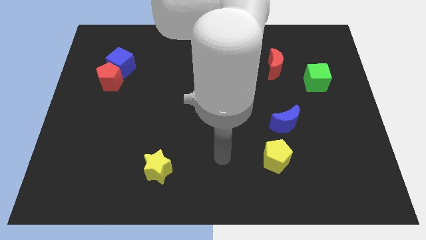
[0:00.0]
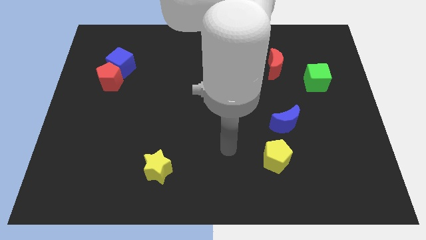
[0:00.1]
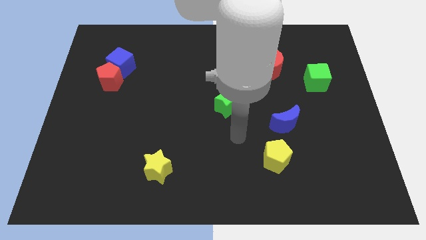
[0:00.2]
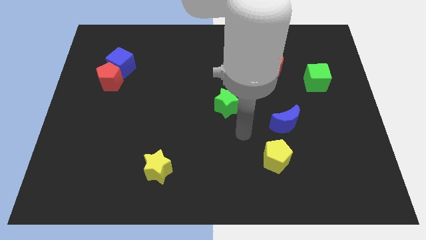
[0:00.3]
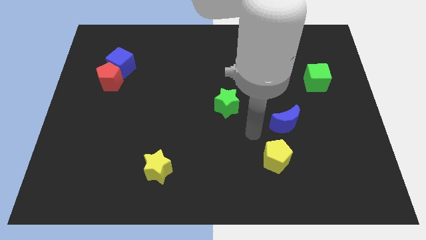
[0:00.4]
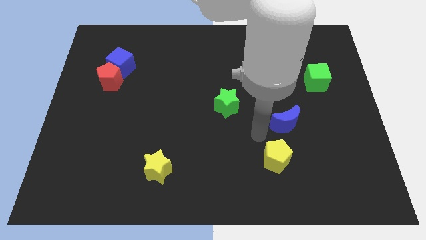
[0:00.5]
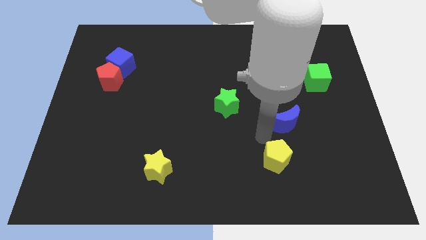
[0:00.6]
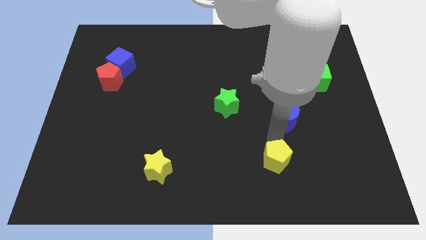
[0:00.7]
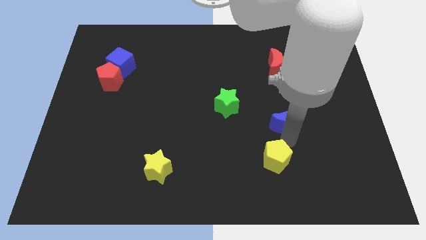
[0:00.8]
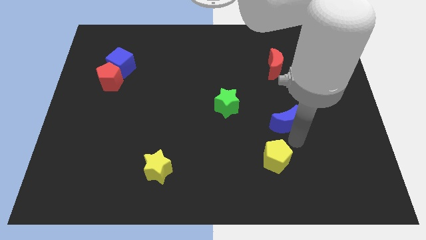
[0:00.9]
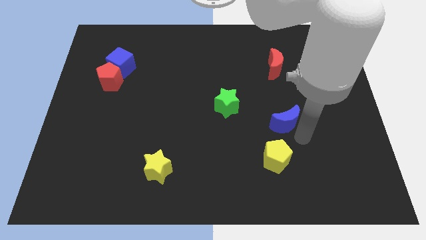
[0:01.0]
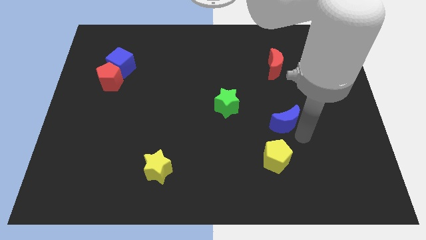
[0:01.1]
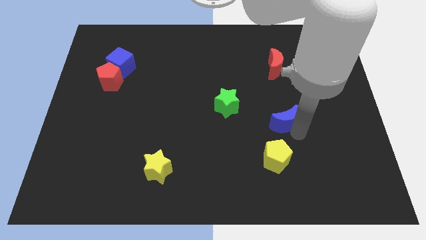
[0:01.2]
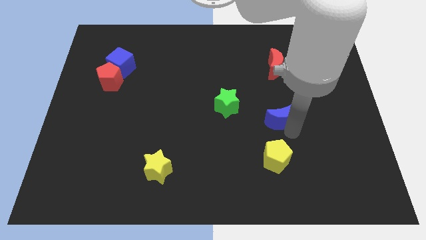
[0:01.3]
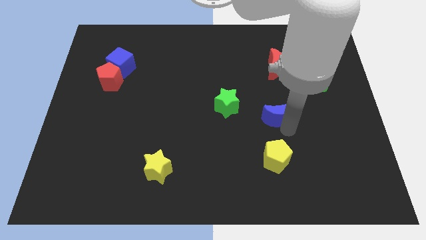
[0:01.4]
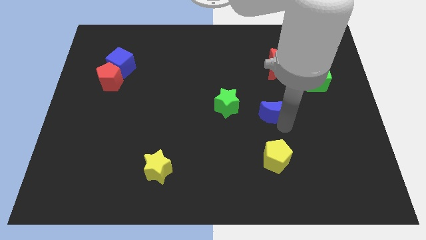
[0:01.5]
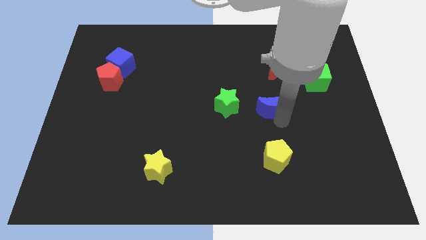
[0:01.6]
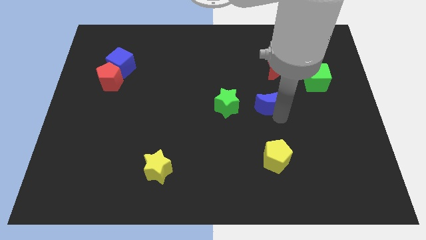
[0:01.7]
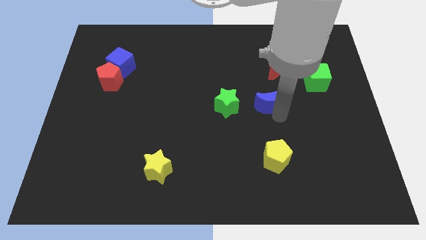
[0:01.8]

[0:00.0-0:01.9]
place the blue crescent to the right of the green star

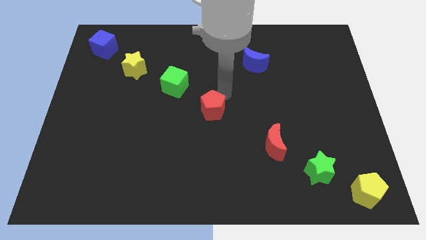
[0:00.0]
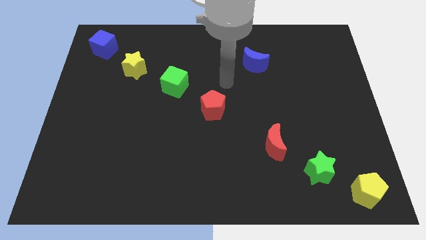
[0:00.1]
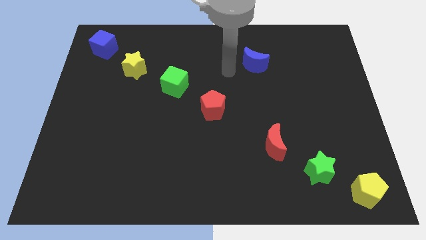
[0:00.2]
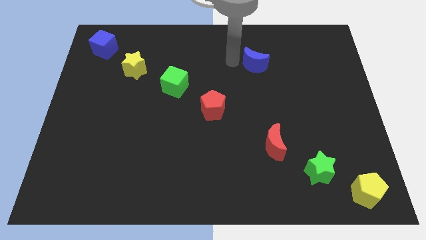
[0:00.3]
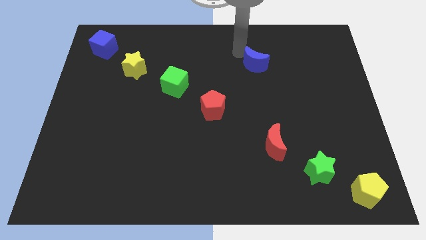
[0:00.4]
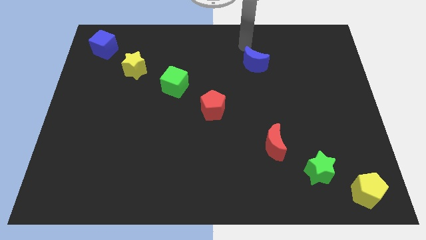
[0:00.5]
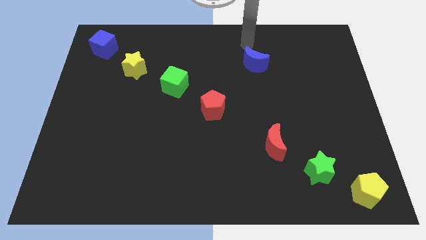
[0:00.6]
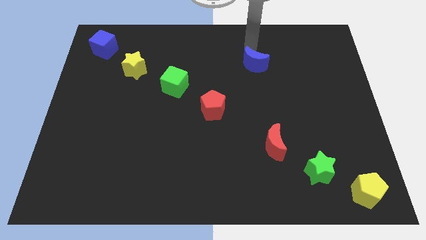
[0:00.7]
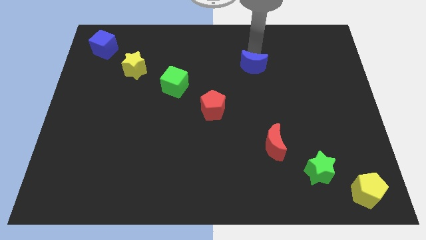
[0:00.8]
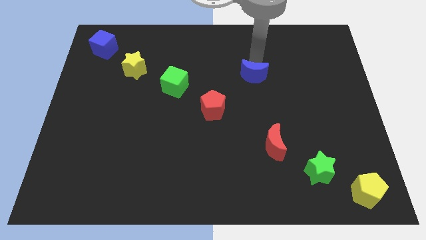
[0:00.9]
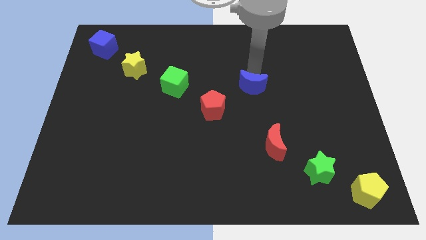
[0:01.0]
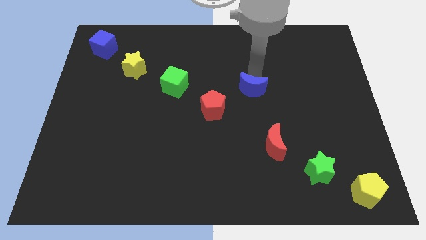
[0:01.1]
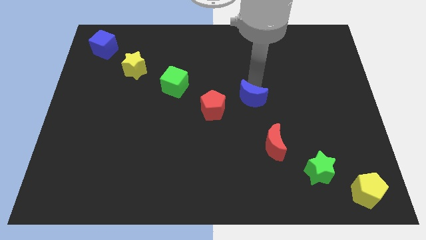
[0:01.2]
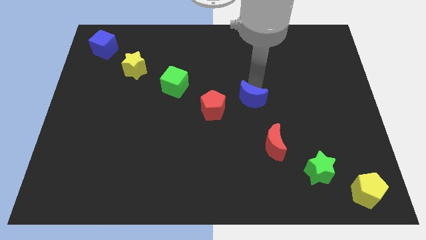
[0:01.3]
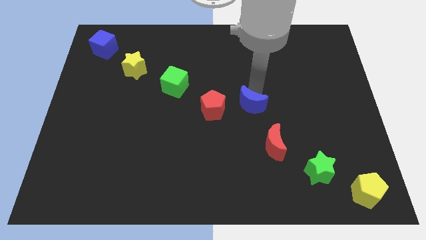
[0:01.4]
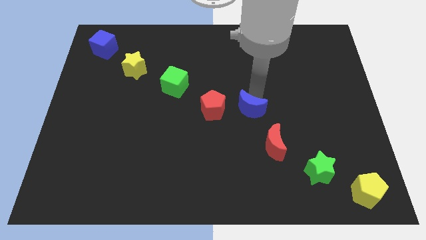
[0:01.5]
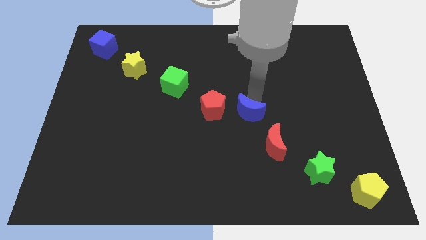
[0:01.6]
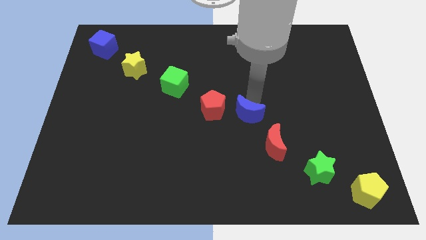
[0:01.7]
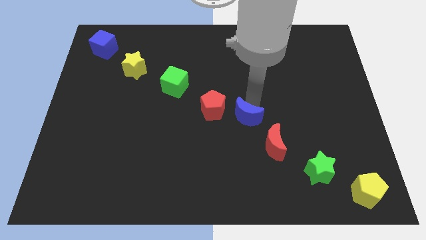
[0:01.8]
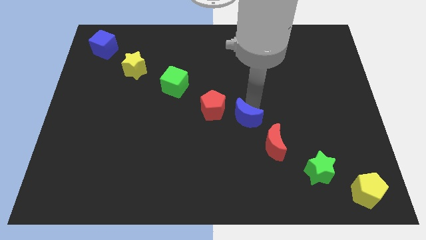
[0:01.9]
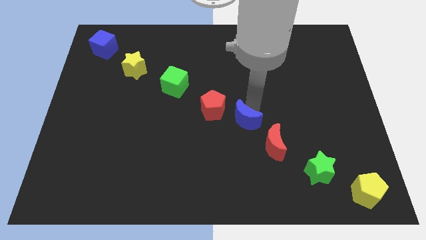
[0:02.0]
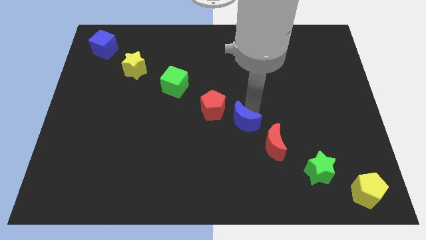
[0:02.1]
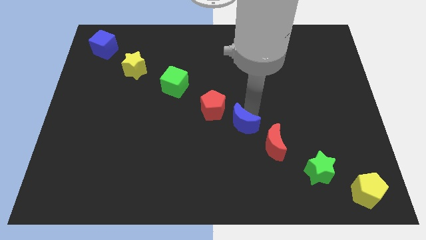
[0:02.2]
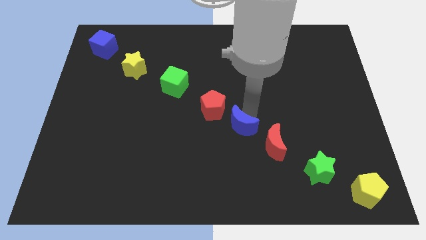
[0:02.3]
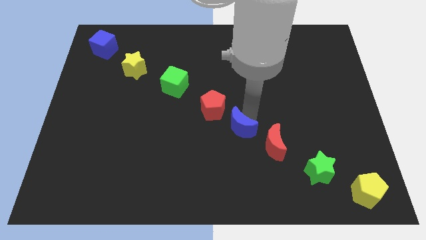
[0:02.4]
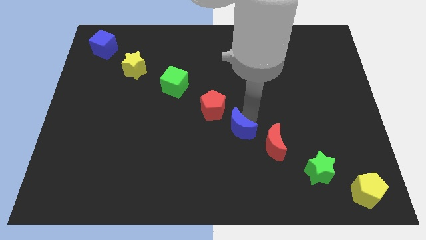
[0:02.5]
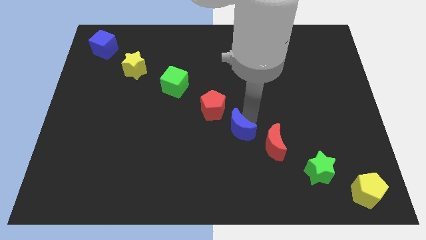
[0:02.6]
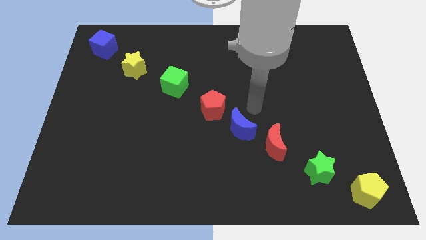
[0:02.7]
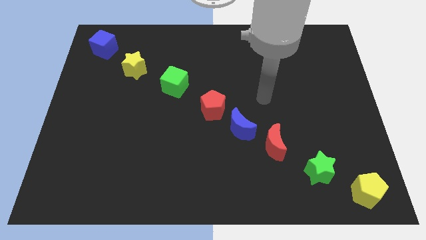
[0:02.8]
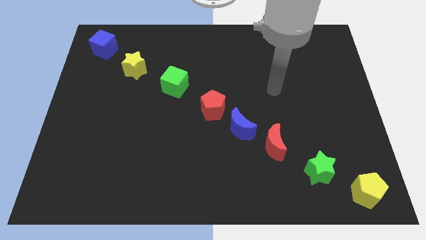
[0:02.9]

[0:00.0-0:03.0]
place the blue crescent in the diagonal line of blocks

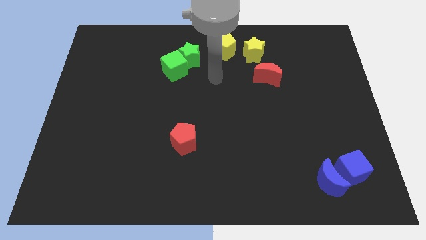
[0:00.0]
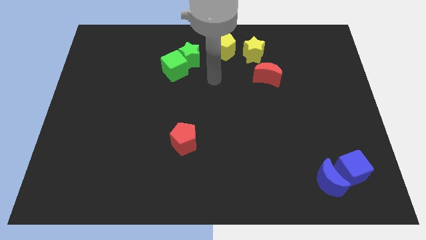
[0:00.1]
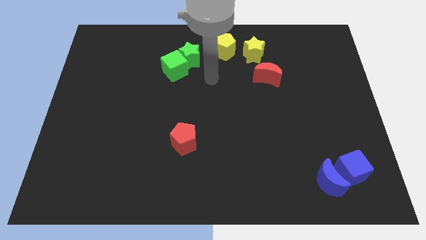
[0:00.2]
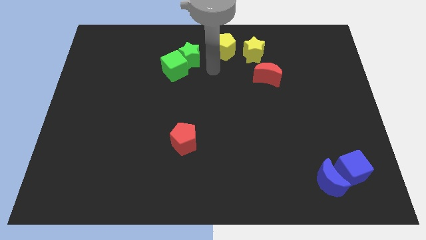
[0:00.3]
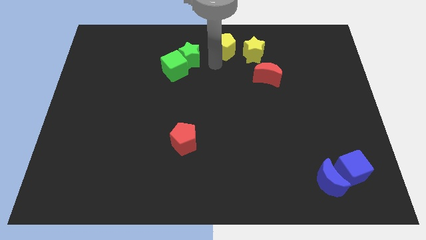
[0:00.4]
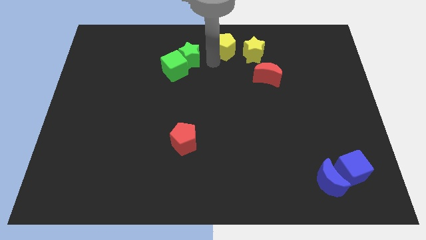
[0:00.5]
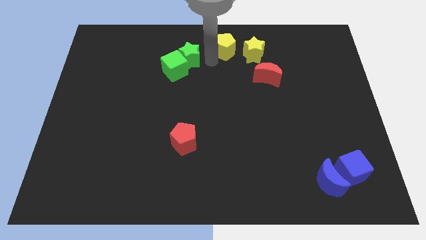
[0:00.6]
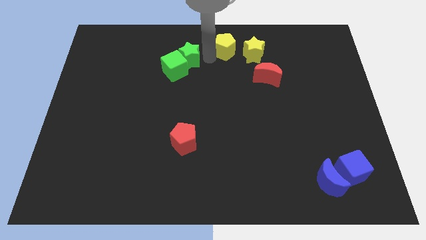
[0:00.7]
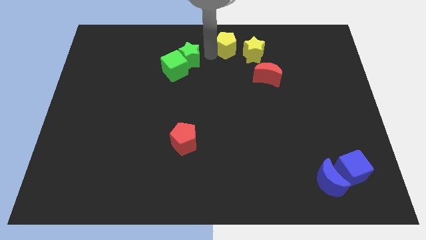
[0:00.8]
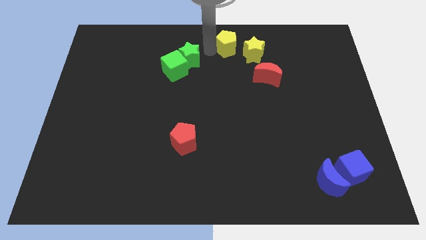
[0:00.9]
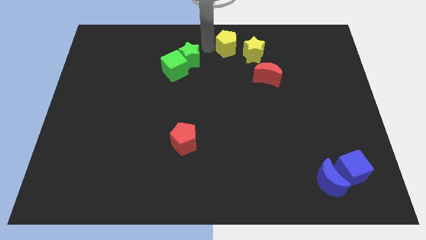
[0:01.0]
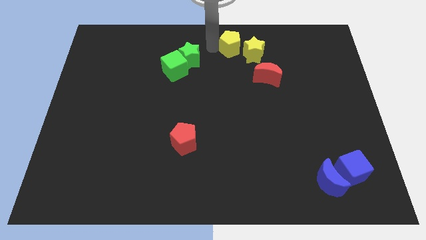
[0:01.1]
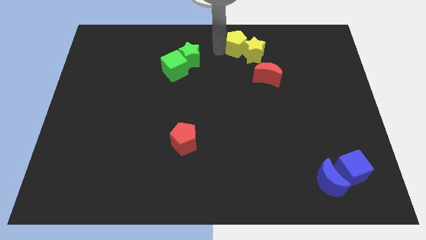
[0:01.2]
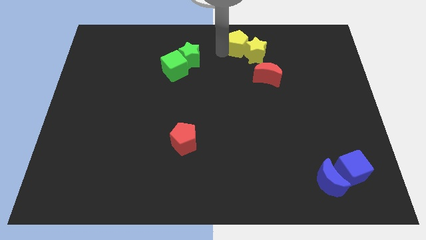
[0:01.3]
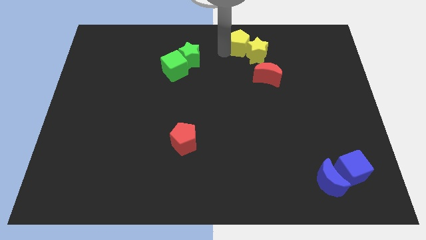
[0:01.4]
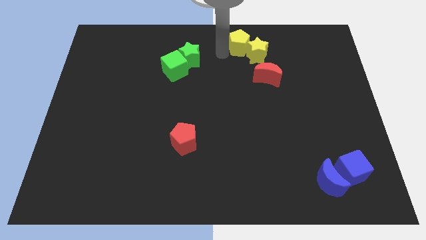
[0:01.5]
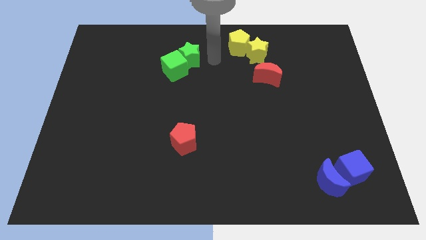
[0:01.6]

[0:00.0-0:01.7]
push the yellow pentagon into yellow star to the left

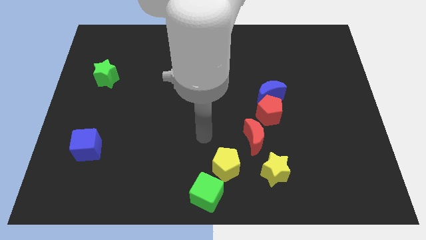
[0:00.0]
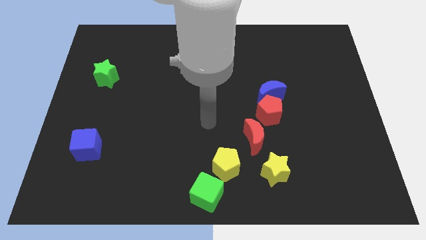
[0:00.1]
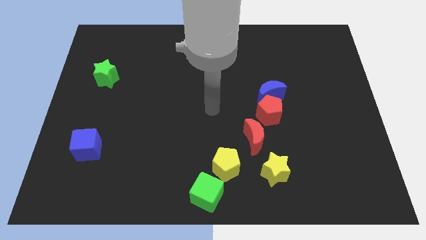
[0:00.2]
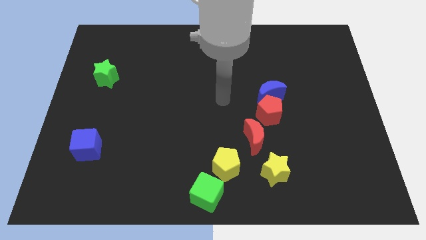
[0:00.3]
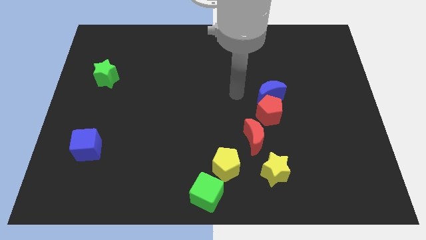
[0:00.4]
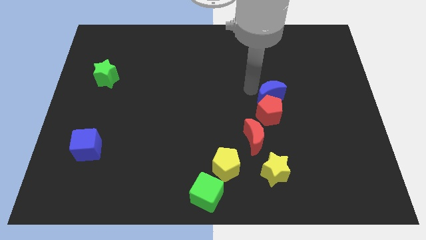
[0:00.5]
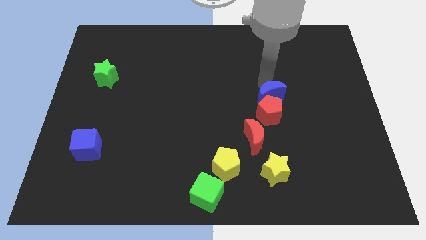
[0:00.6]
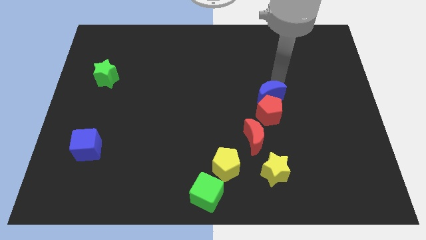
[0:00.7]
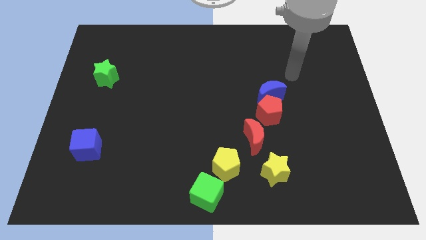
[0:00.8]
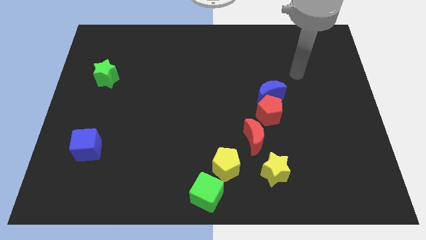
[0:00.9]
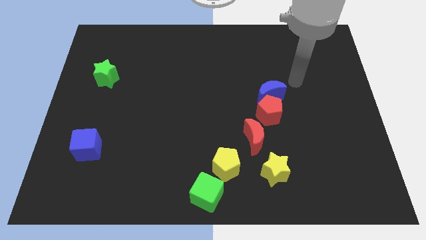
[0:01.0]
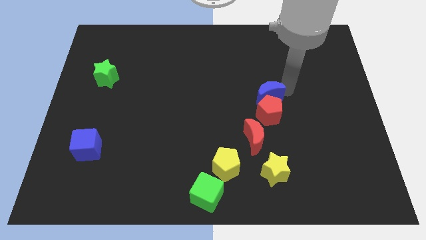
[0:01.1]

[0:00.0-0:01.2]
push the blue crescent to the left

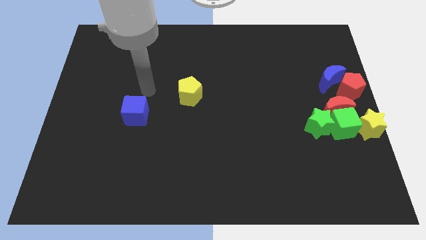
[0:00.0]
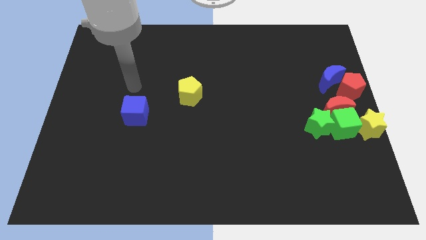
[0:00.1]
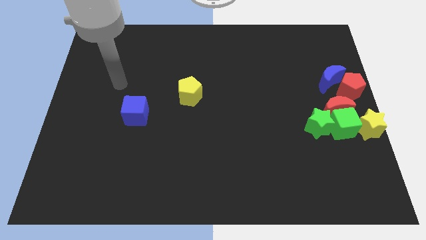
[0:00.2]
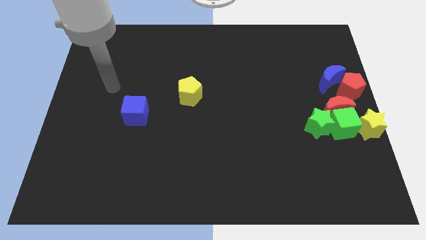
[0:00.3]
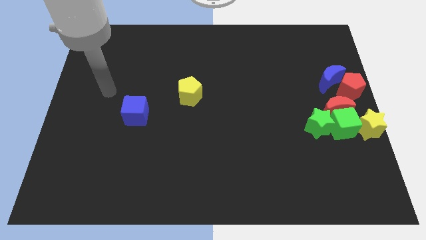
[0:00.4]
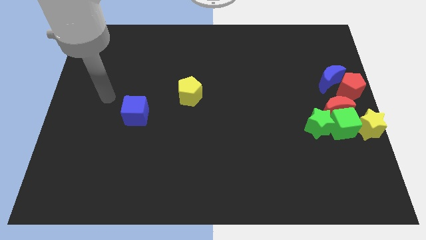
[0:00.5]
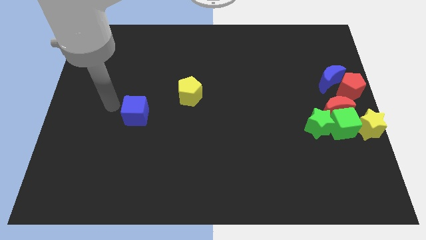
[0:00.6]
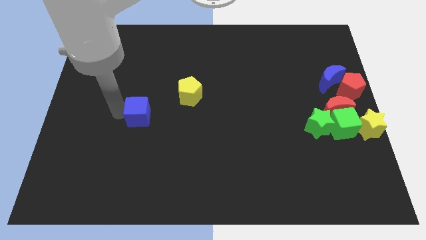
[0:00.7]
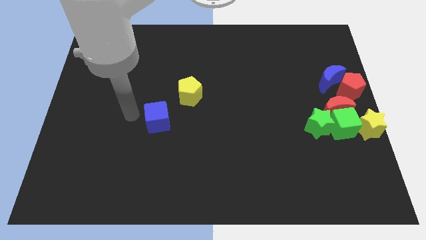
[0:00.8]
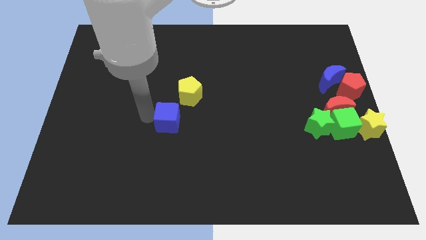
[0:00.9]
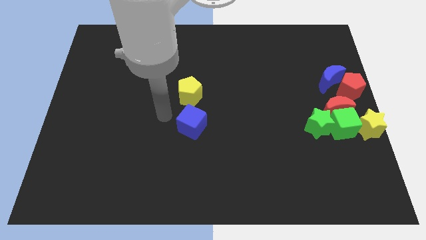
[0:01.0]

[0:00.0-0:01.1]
push the blue cube to the bottom side of the yellow pentagon

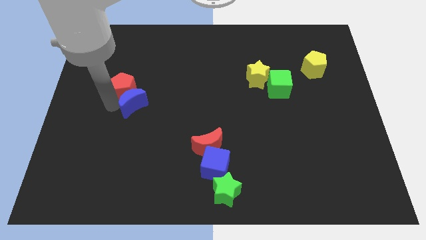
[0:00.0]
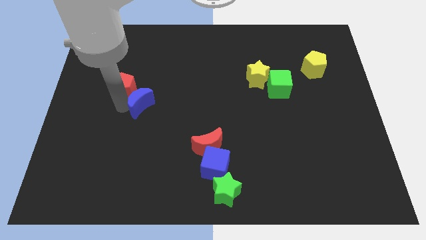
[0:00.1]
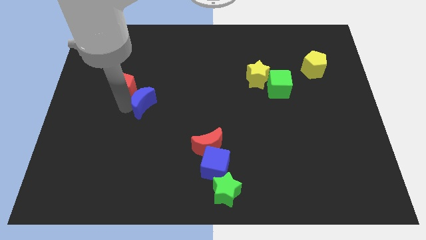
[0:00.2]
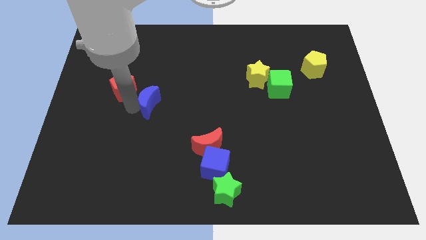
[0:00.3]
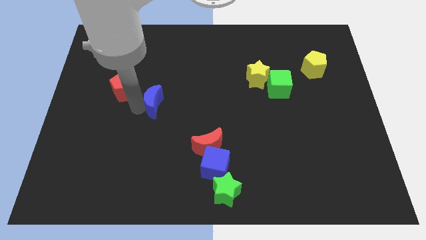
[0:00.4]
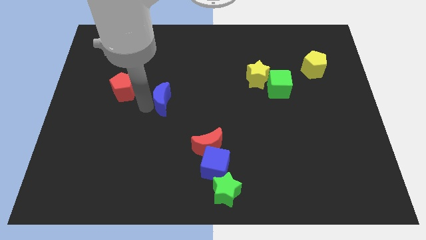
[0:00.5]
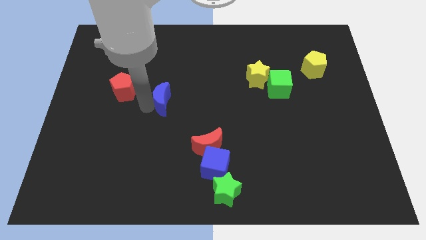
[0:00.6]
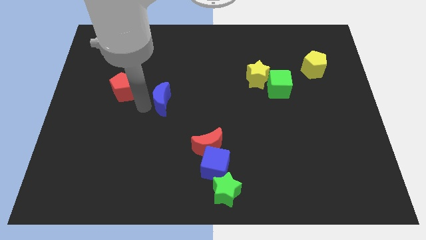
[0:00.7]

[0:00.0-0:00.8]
move the blue crescent towards the centre of board
